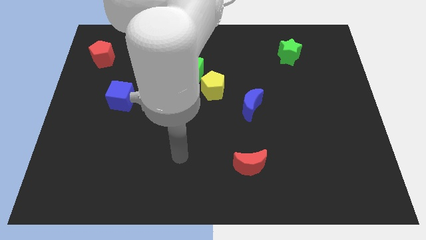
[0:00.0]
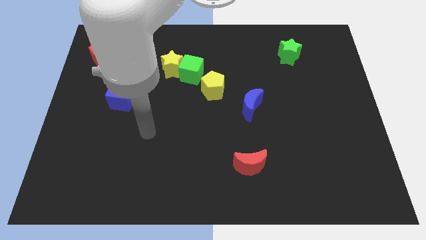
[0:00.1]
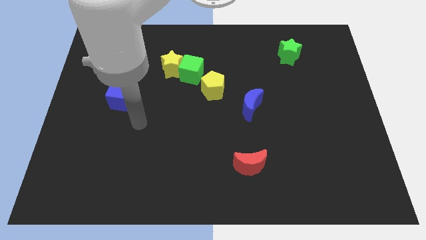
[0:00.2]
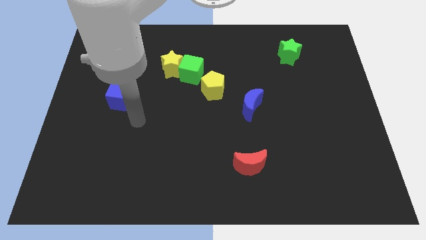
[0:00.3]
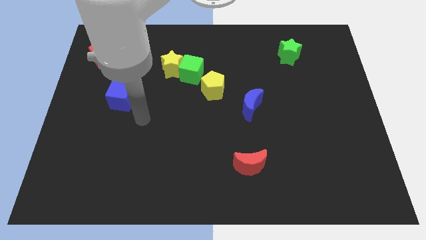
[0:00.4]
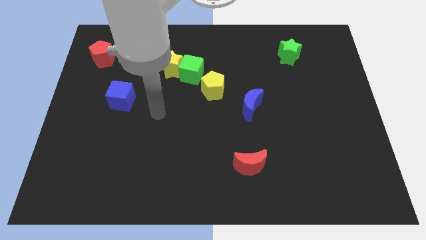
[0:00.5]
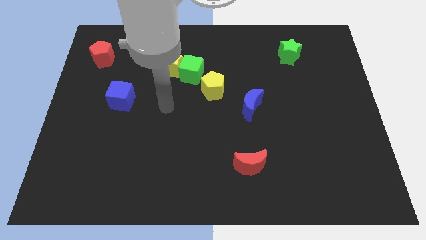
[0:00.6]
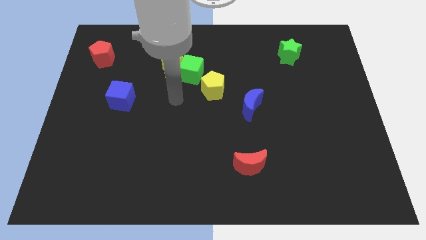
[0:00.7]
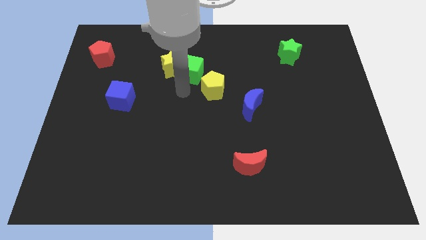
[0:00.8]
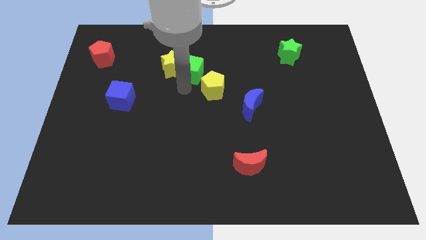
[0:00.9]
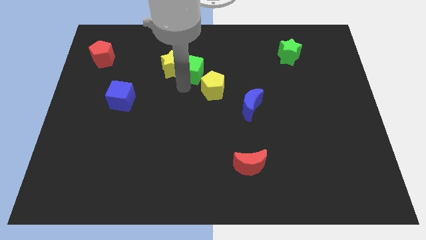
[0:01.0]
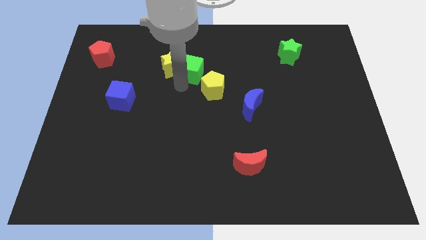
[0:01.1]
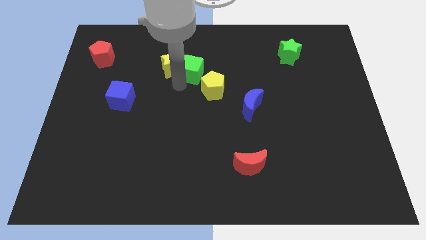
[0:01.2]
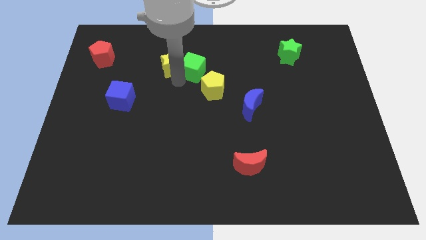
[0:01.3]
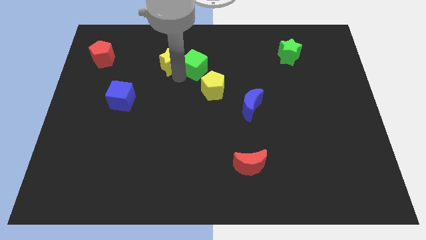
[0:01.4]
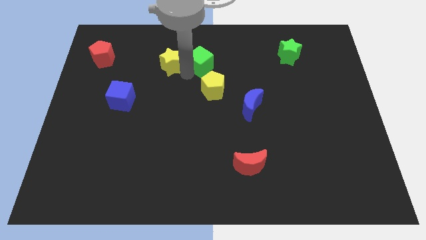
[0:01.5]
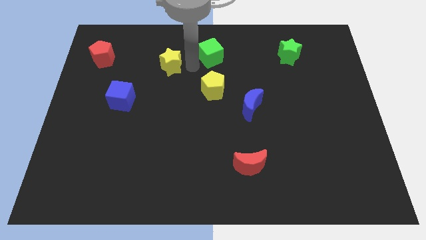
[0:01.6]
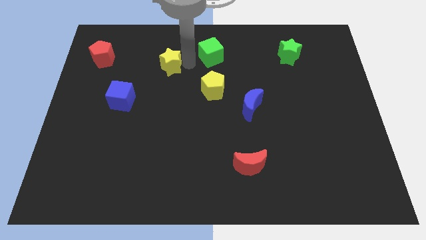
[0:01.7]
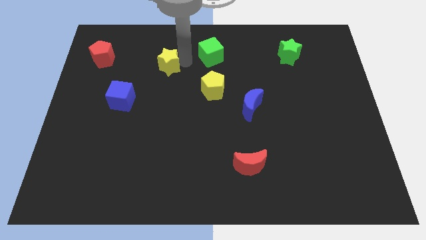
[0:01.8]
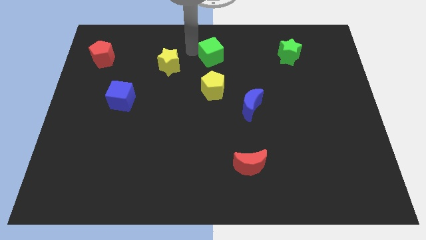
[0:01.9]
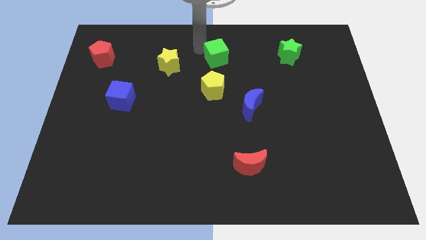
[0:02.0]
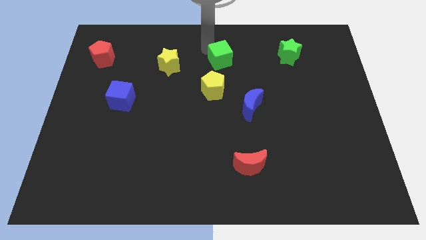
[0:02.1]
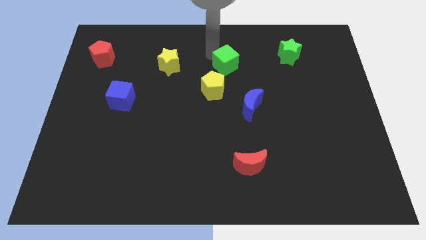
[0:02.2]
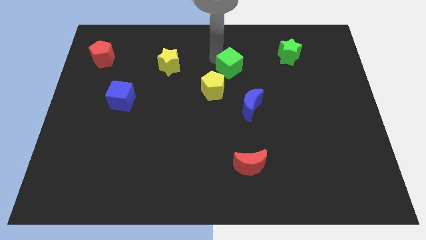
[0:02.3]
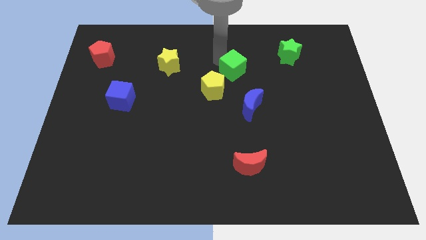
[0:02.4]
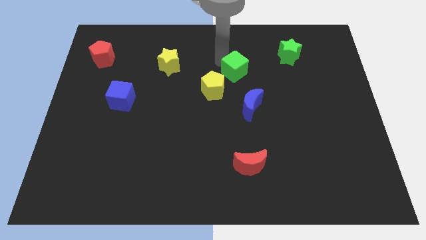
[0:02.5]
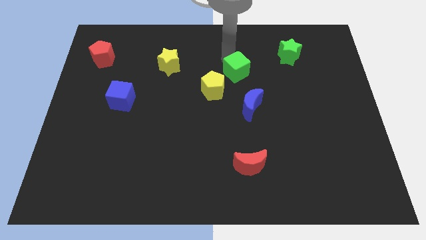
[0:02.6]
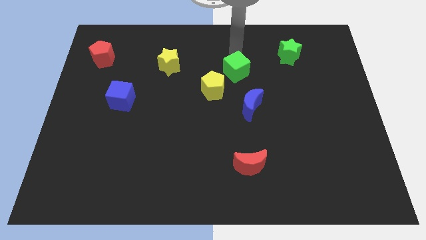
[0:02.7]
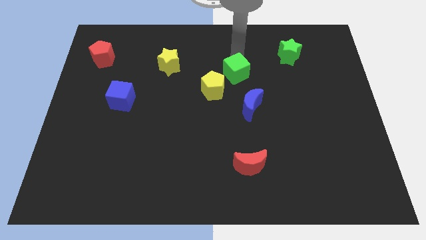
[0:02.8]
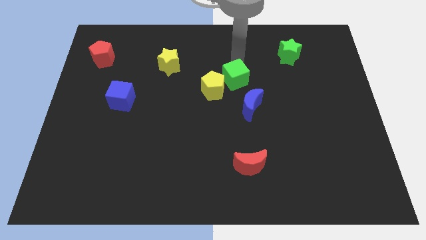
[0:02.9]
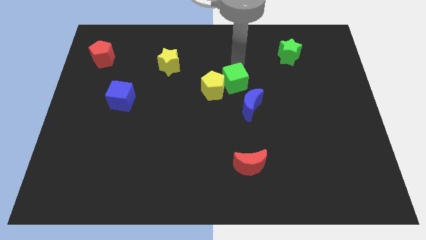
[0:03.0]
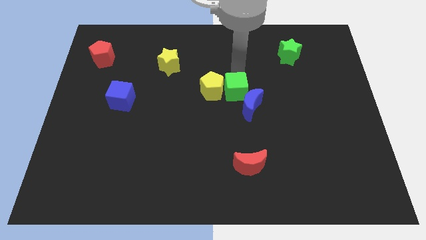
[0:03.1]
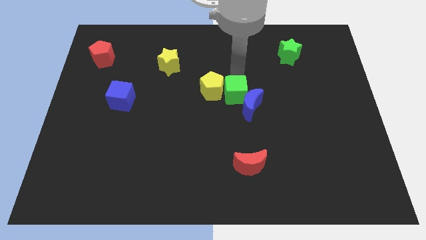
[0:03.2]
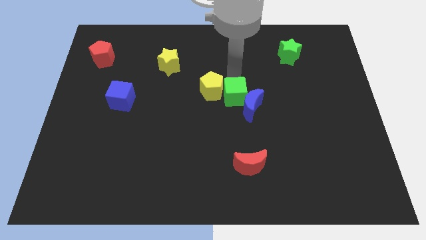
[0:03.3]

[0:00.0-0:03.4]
put the green cube towards the blue moon

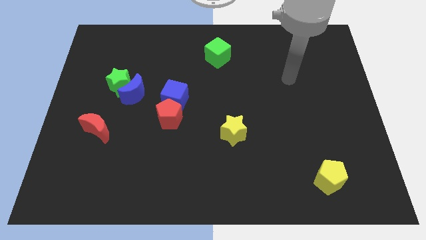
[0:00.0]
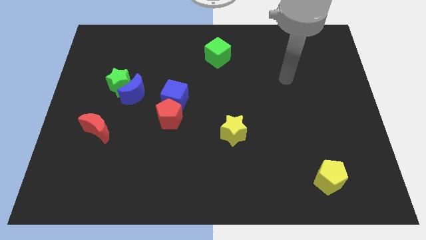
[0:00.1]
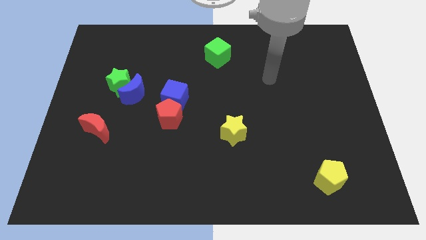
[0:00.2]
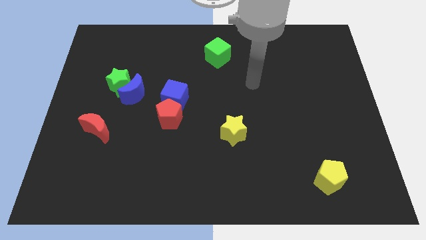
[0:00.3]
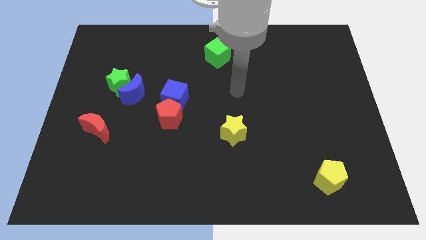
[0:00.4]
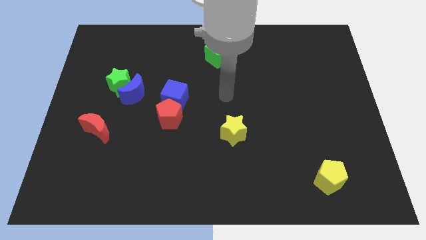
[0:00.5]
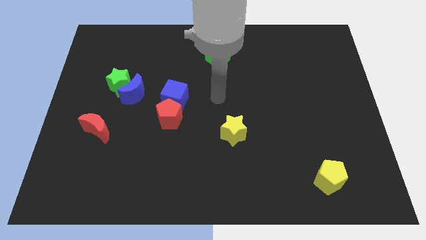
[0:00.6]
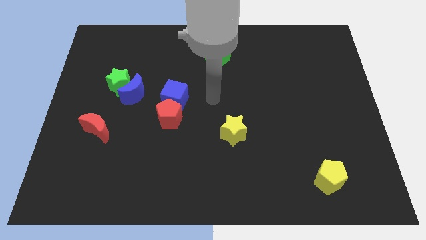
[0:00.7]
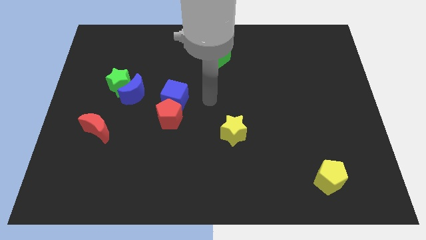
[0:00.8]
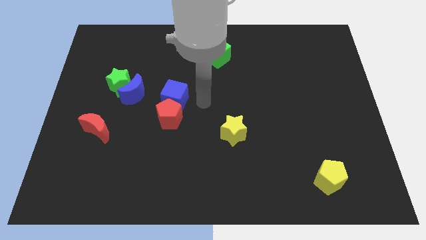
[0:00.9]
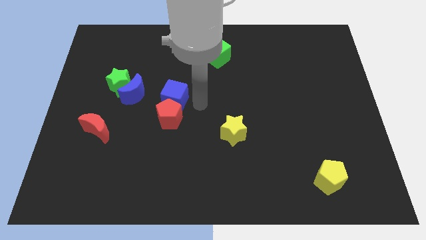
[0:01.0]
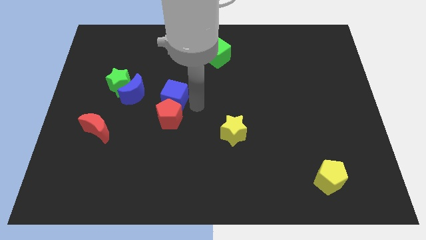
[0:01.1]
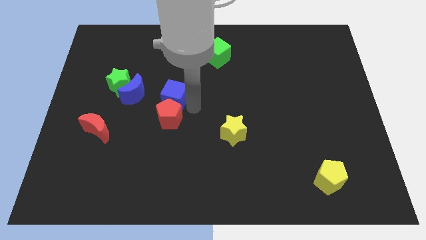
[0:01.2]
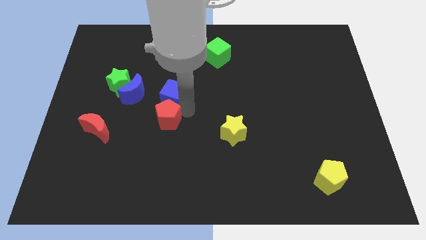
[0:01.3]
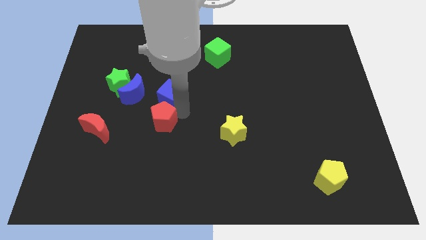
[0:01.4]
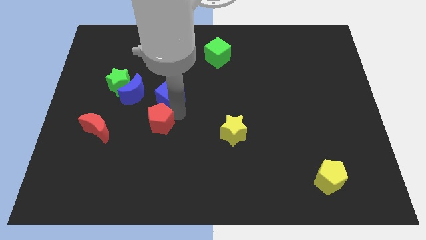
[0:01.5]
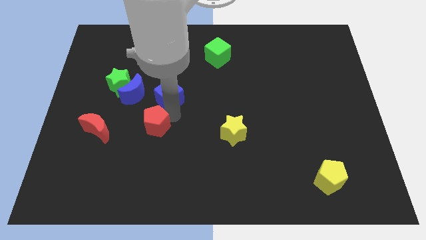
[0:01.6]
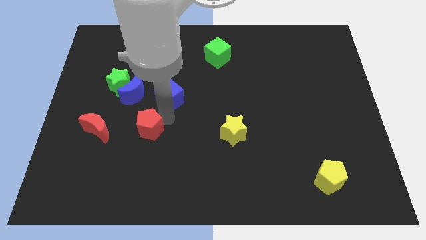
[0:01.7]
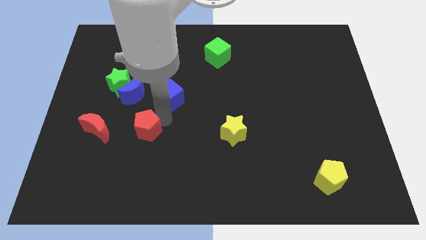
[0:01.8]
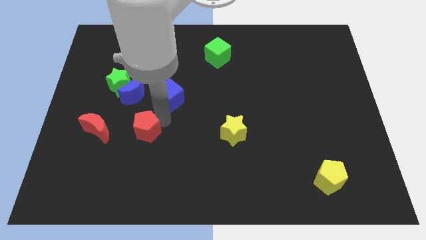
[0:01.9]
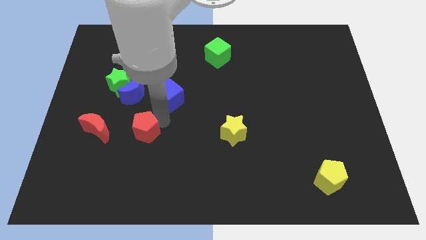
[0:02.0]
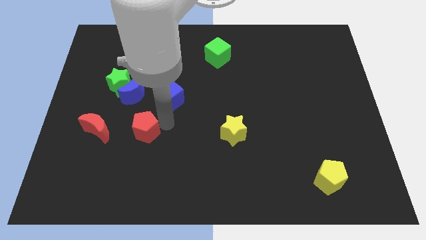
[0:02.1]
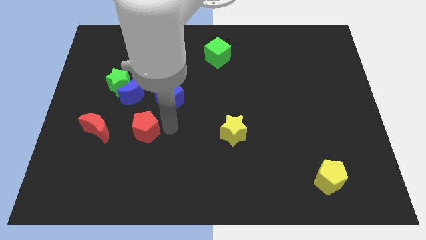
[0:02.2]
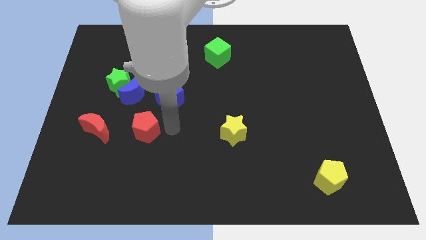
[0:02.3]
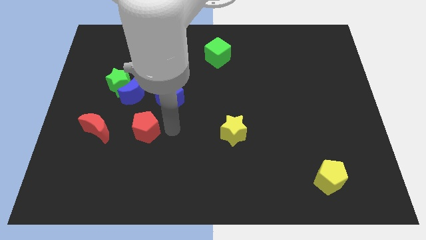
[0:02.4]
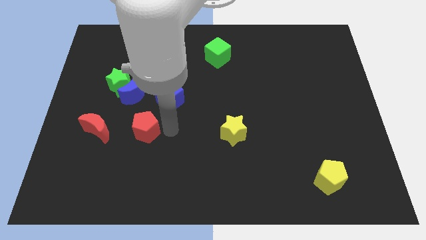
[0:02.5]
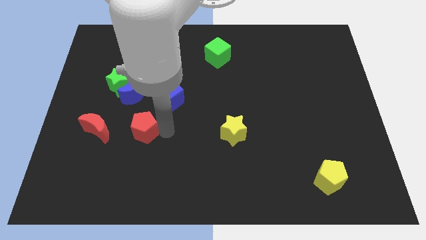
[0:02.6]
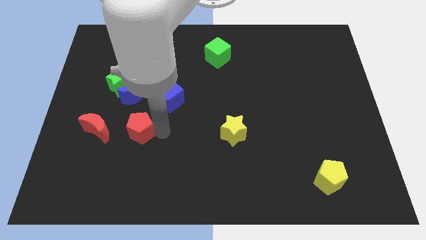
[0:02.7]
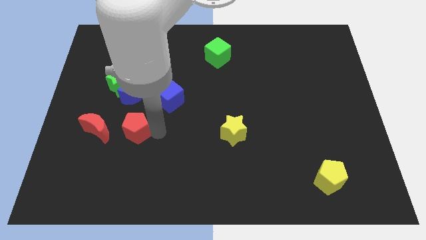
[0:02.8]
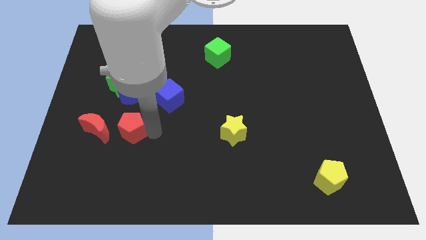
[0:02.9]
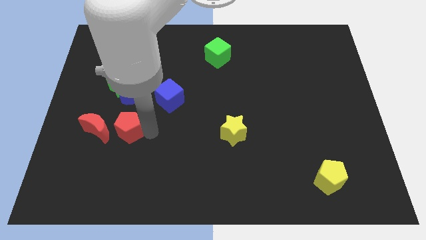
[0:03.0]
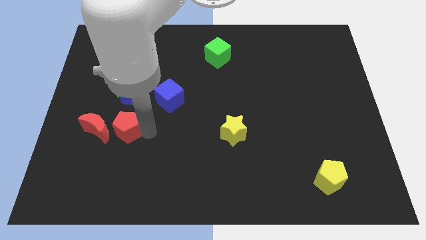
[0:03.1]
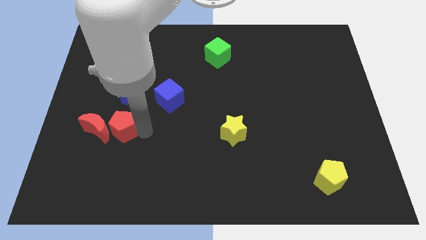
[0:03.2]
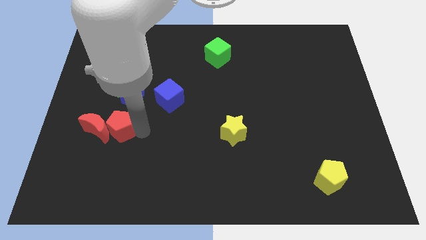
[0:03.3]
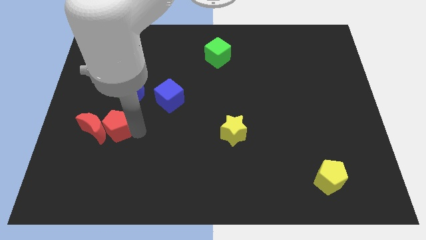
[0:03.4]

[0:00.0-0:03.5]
push the red pentagon close to the red moon

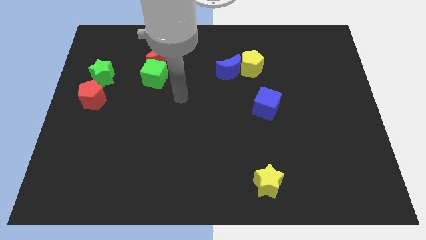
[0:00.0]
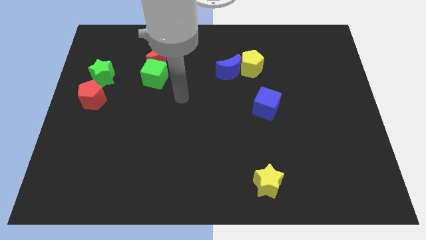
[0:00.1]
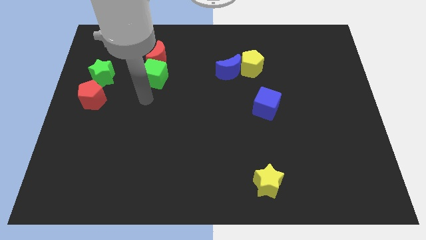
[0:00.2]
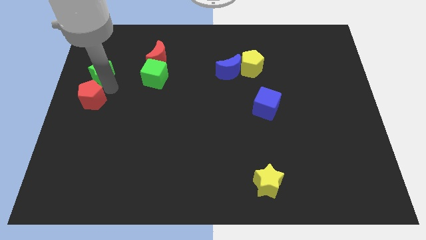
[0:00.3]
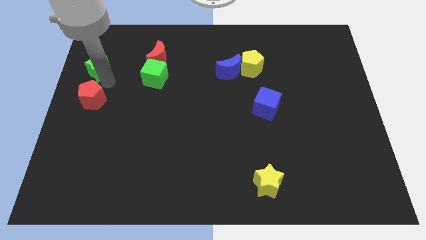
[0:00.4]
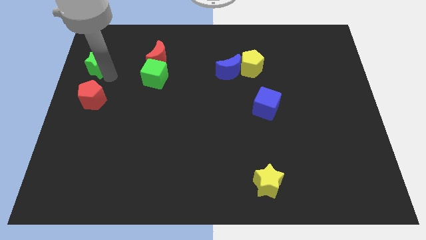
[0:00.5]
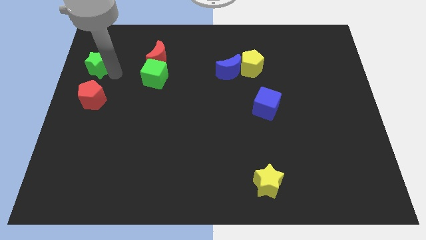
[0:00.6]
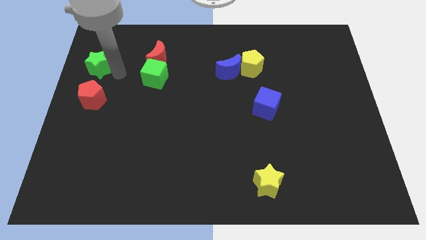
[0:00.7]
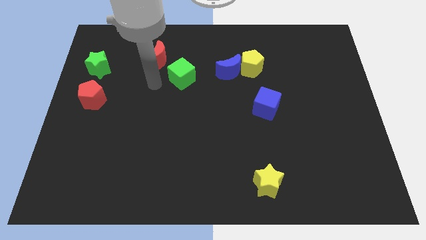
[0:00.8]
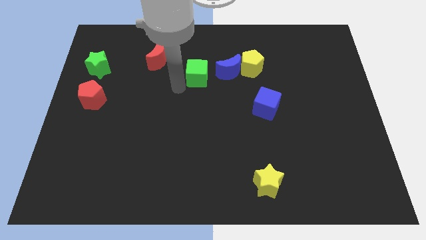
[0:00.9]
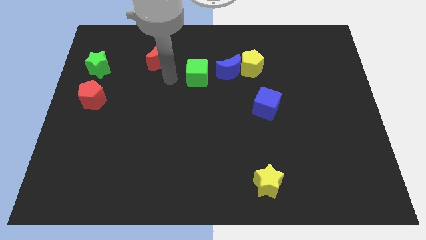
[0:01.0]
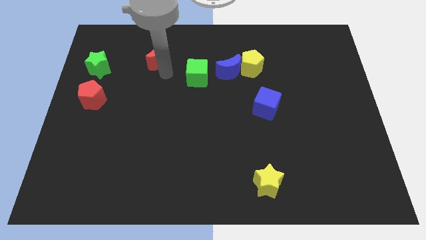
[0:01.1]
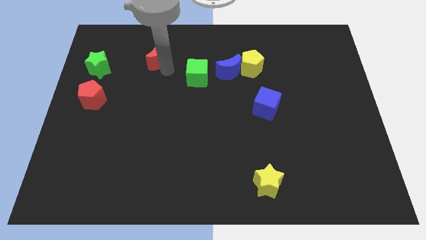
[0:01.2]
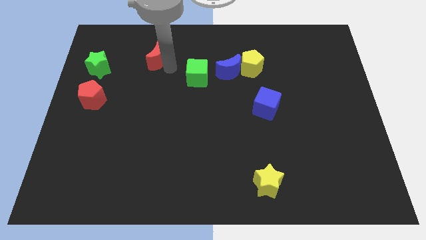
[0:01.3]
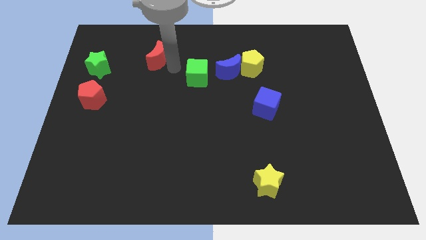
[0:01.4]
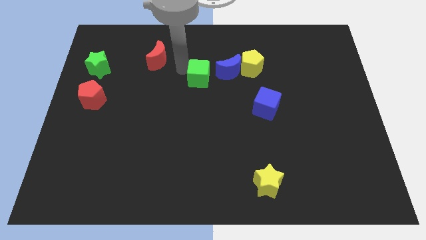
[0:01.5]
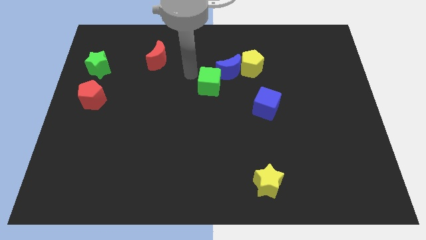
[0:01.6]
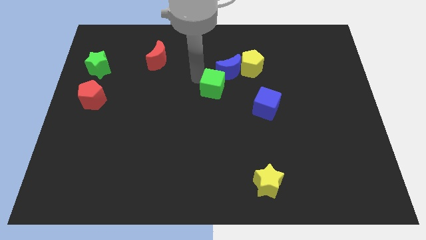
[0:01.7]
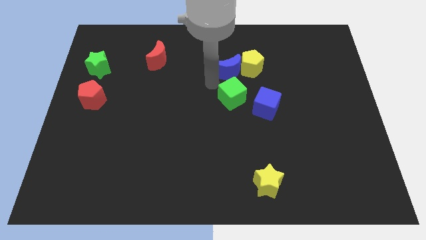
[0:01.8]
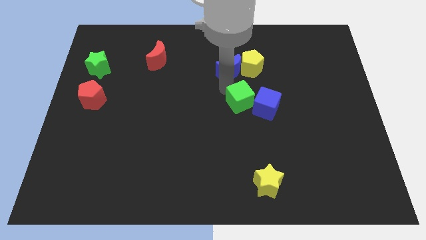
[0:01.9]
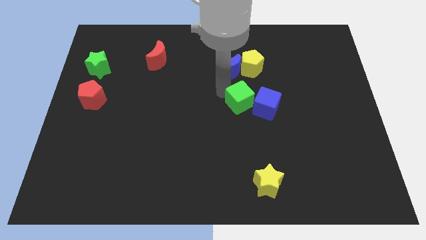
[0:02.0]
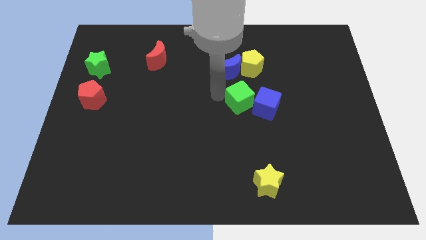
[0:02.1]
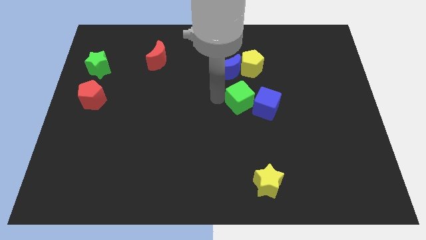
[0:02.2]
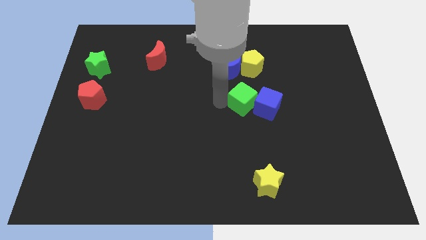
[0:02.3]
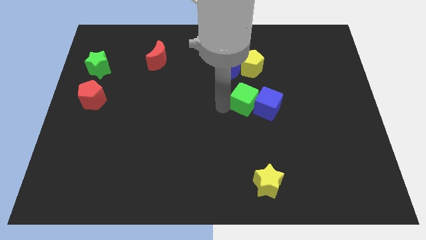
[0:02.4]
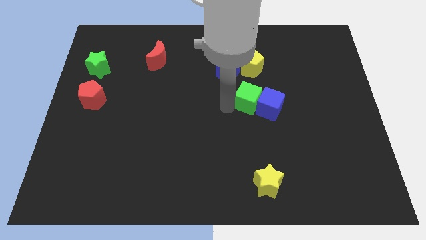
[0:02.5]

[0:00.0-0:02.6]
move the green cube towards the blue cube
